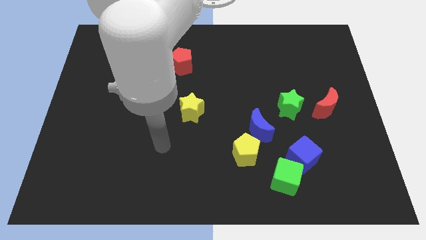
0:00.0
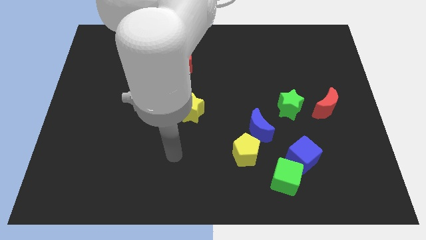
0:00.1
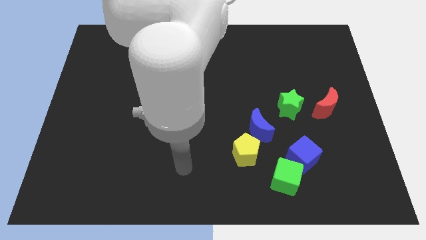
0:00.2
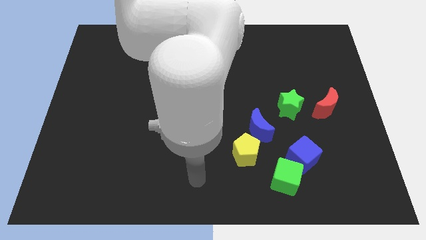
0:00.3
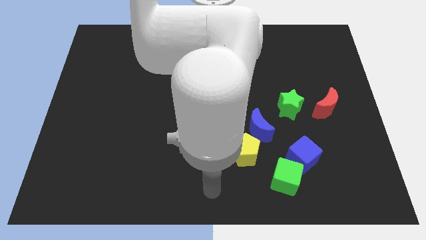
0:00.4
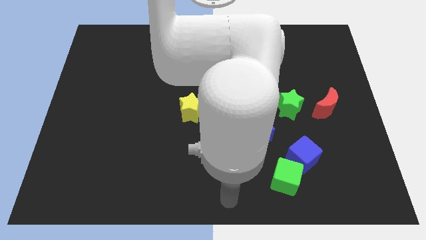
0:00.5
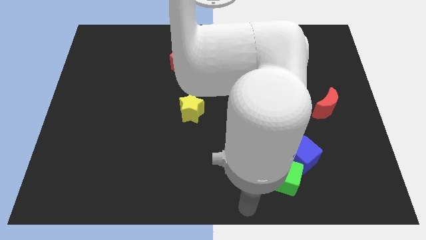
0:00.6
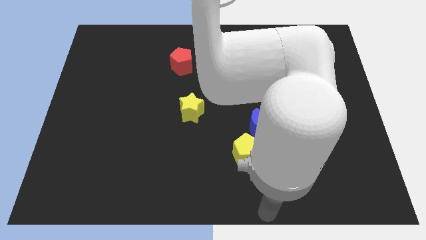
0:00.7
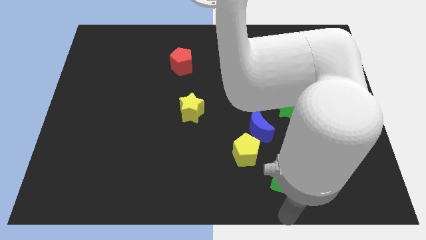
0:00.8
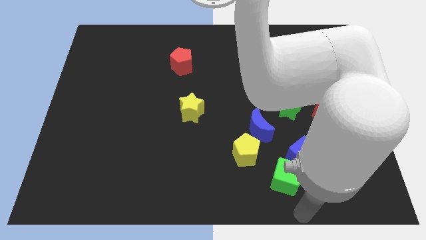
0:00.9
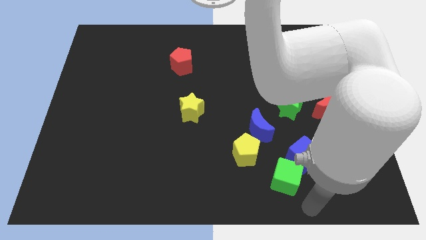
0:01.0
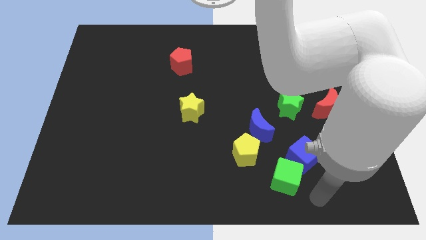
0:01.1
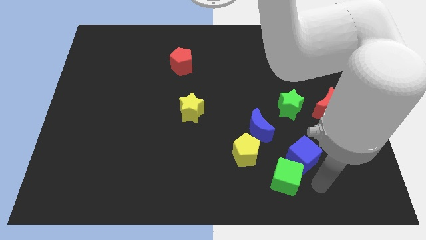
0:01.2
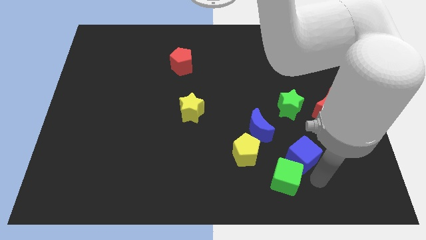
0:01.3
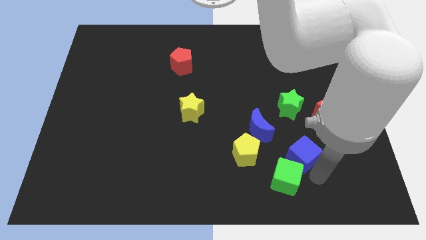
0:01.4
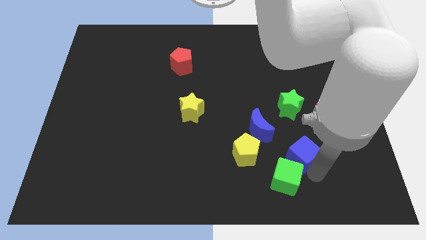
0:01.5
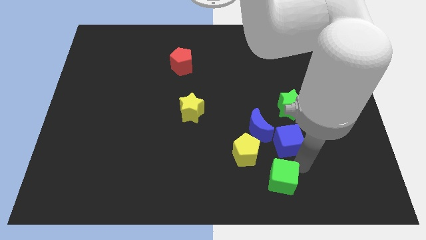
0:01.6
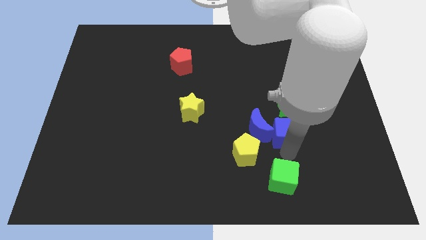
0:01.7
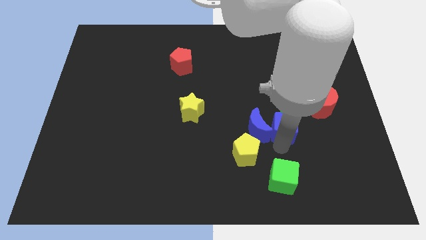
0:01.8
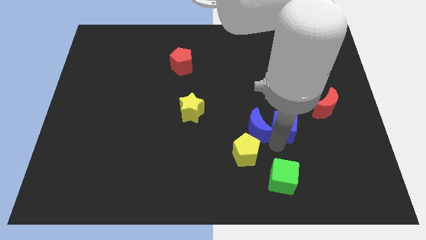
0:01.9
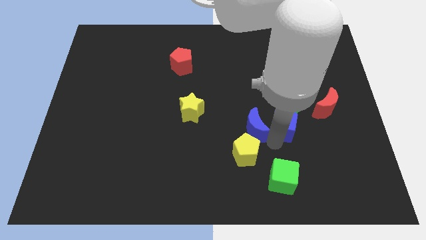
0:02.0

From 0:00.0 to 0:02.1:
place the blue cube down to the green star

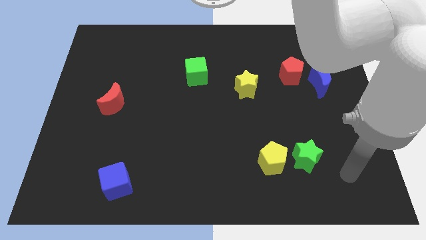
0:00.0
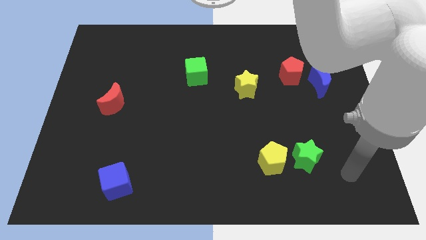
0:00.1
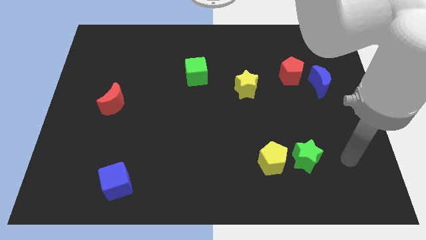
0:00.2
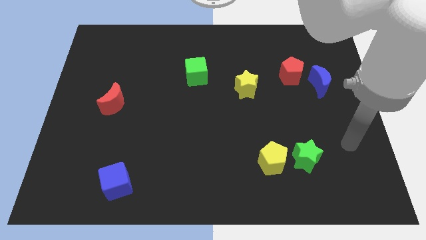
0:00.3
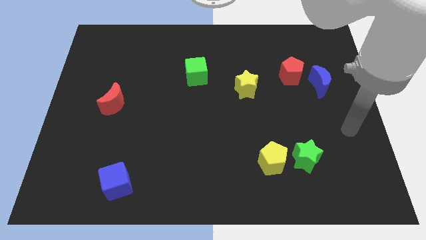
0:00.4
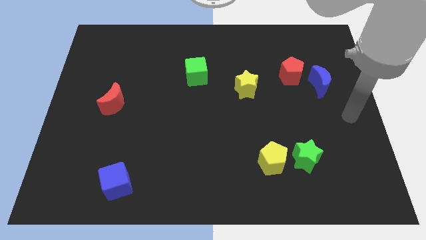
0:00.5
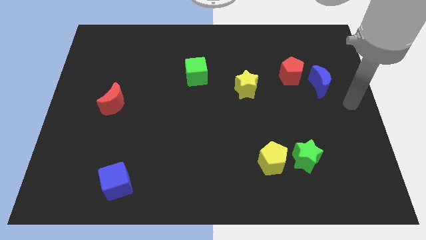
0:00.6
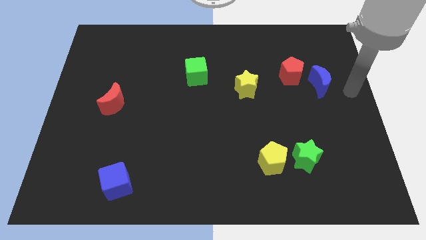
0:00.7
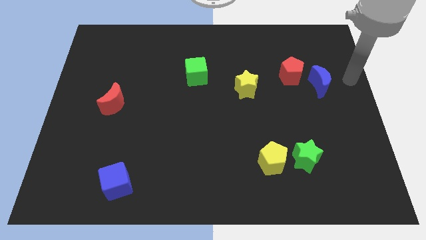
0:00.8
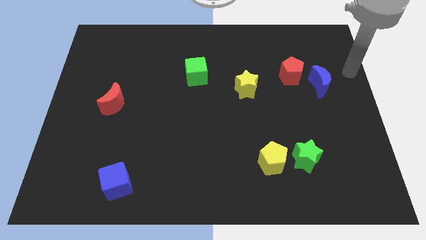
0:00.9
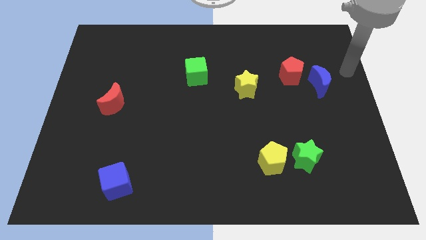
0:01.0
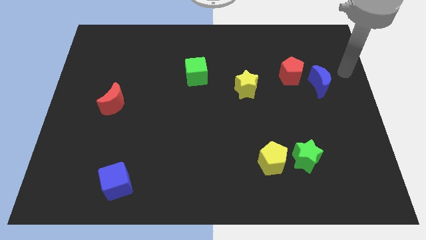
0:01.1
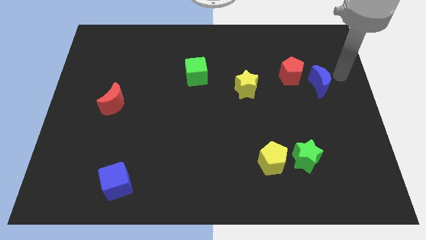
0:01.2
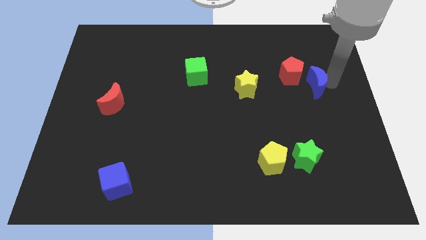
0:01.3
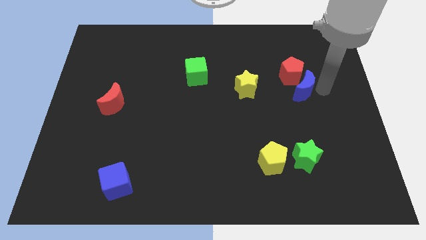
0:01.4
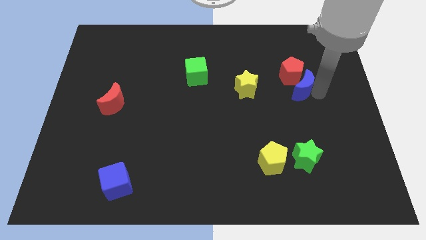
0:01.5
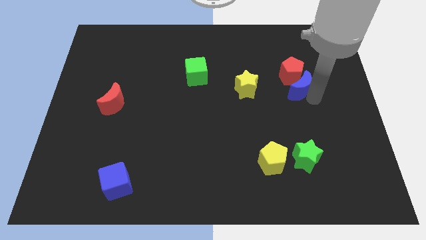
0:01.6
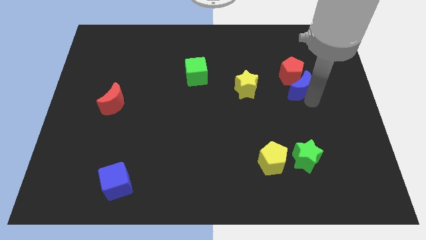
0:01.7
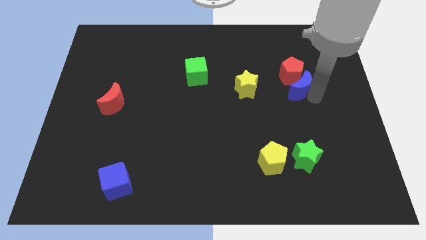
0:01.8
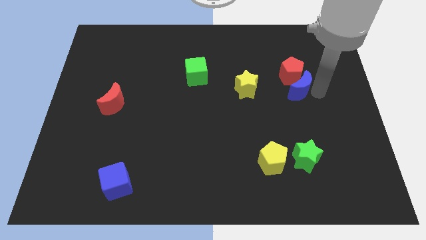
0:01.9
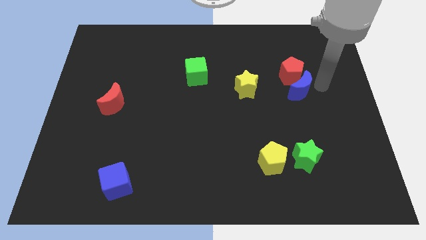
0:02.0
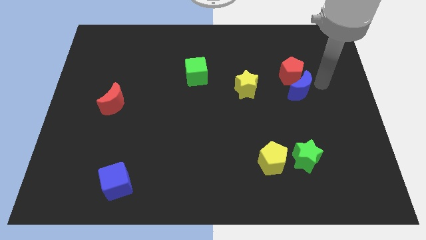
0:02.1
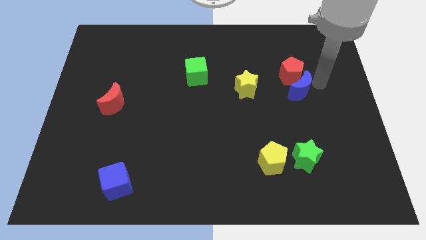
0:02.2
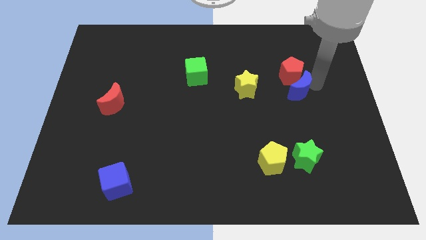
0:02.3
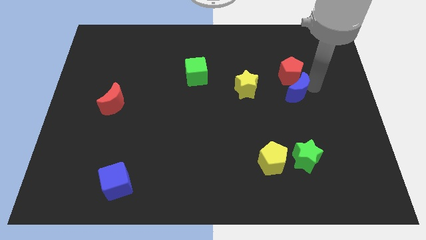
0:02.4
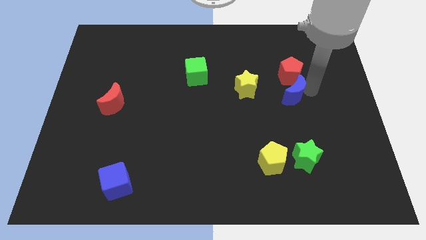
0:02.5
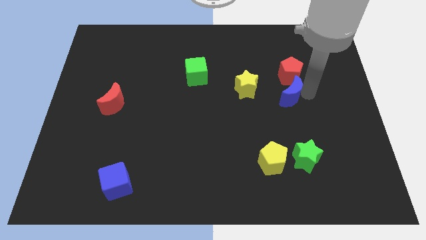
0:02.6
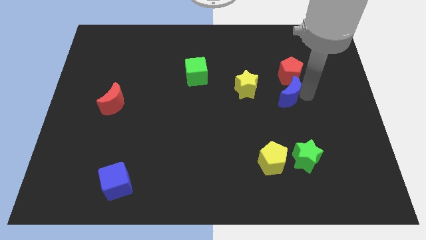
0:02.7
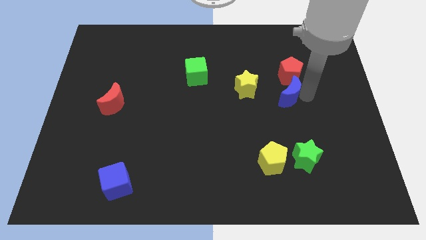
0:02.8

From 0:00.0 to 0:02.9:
move the blue moon towards red pentagon

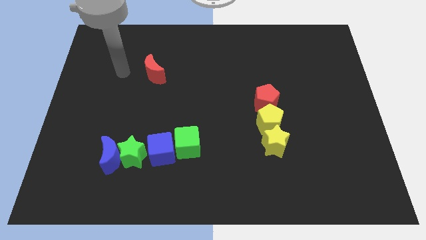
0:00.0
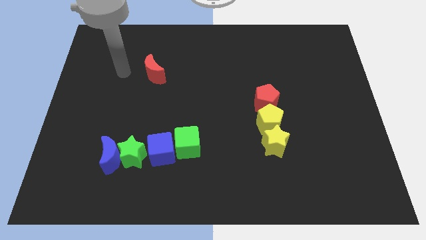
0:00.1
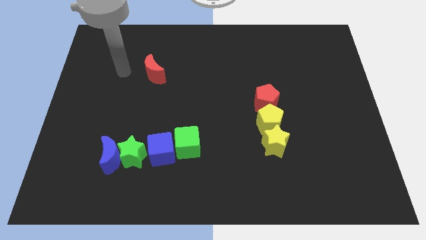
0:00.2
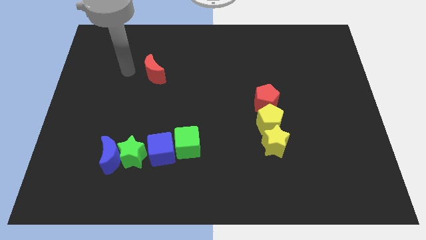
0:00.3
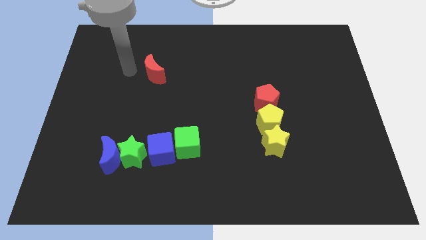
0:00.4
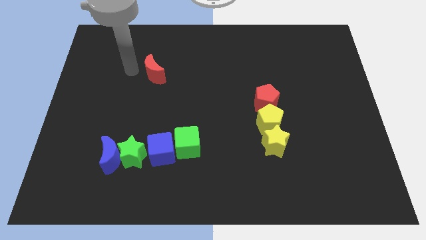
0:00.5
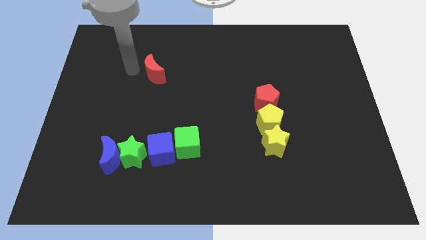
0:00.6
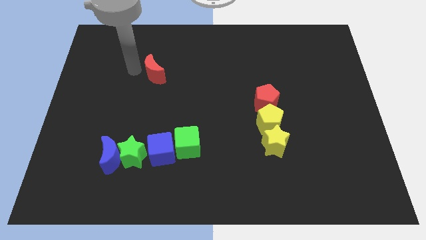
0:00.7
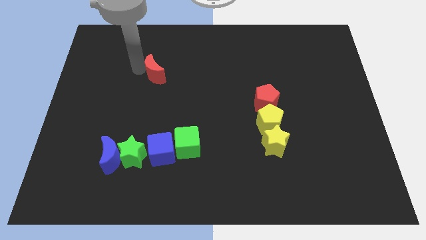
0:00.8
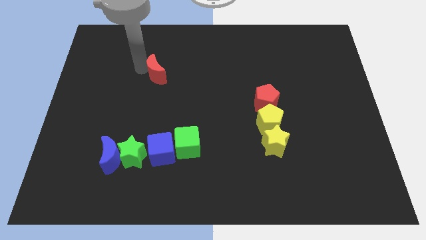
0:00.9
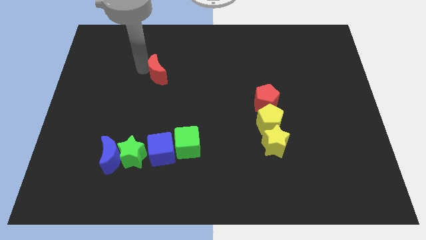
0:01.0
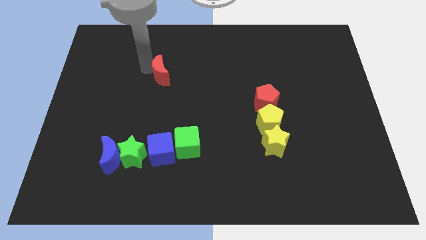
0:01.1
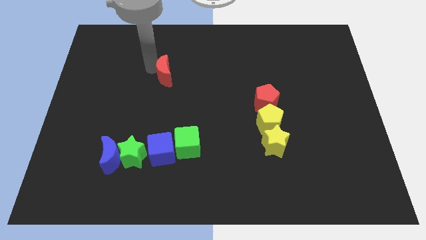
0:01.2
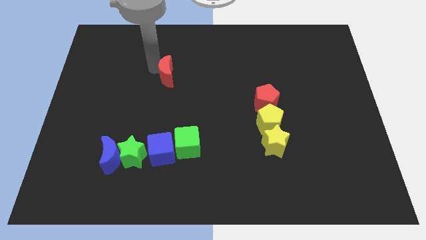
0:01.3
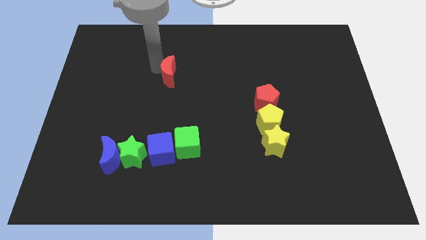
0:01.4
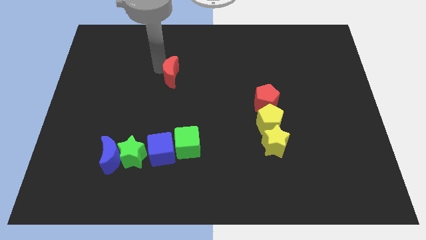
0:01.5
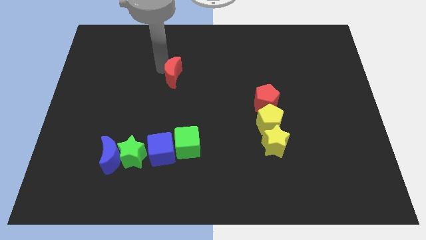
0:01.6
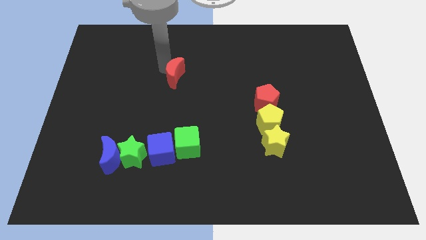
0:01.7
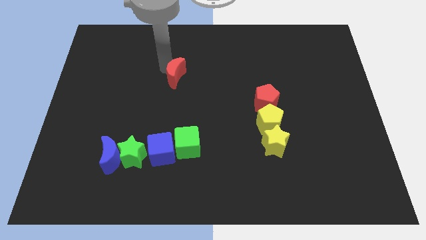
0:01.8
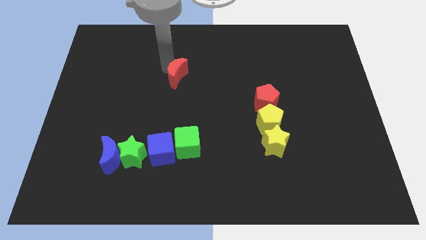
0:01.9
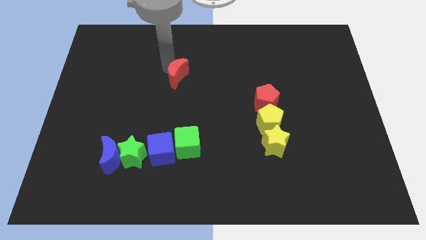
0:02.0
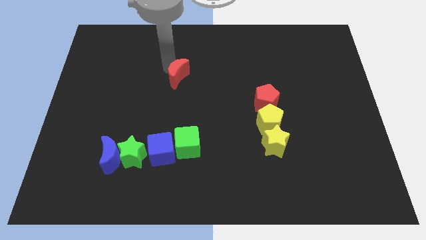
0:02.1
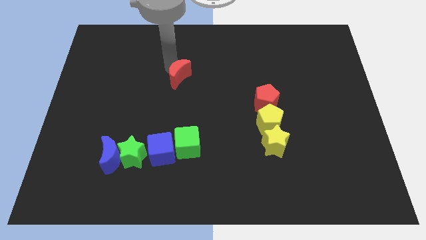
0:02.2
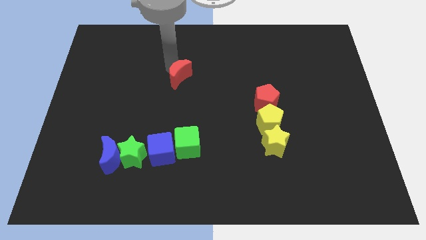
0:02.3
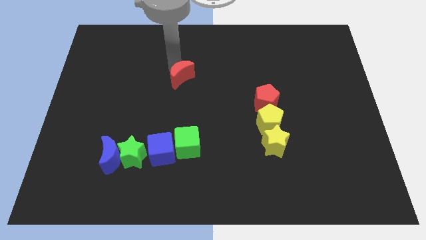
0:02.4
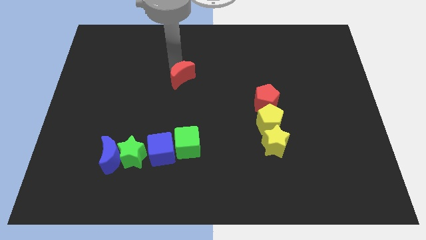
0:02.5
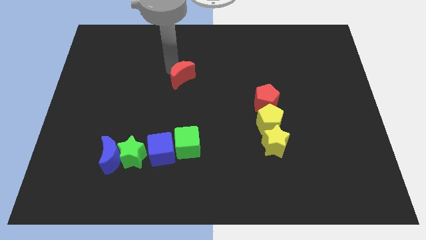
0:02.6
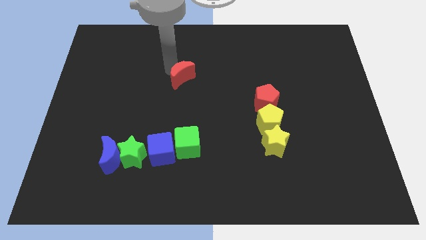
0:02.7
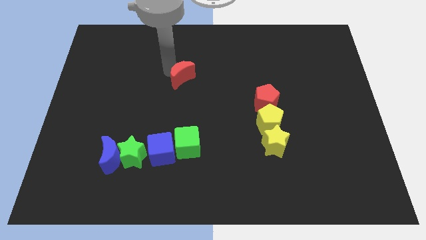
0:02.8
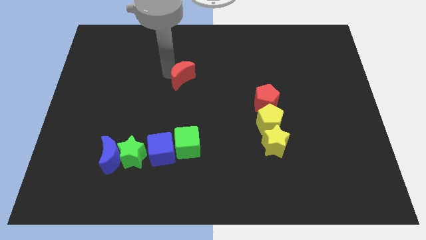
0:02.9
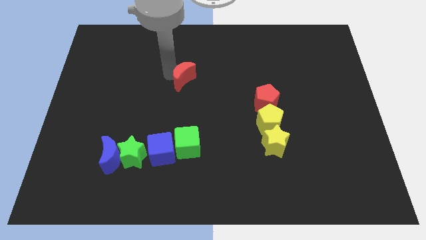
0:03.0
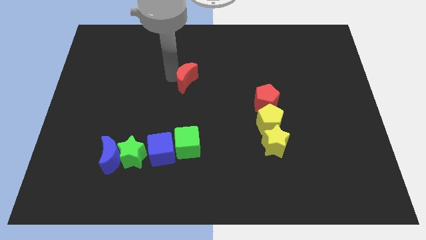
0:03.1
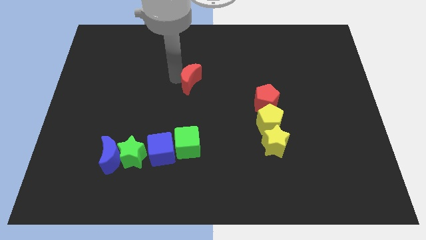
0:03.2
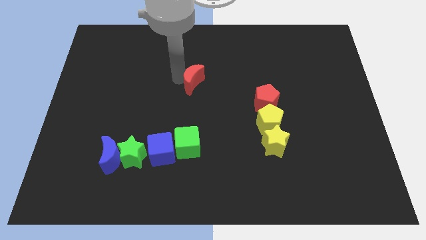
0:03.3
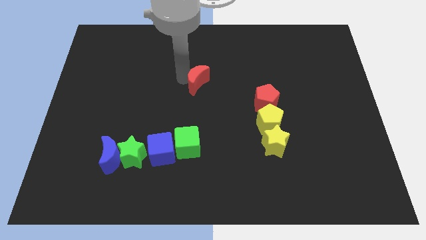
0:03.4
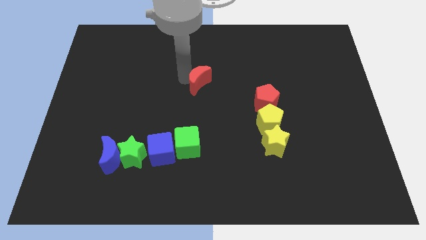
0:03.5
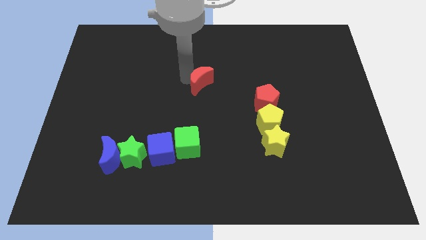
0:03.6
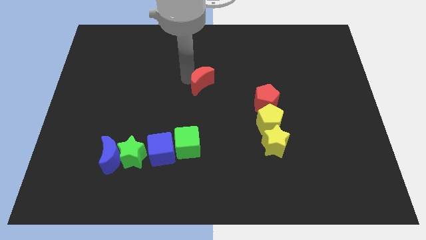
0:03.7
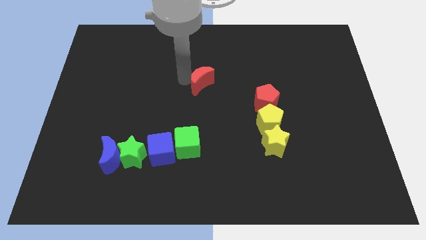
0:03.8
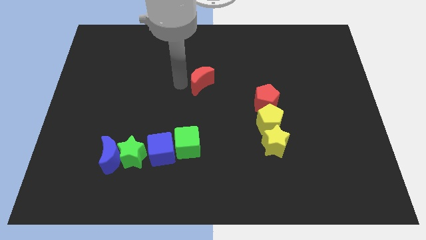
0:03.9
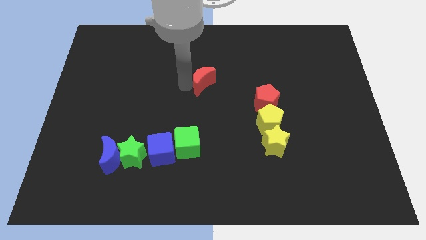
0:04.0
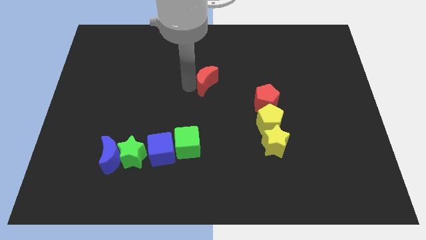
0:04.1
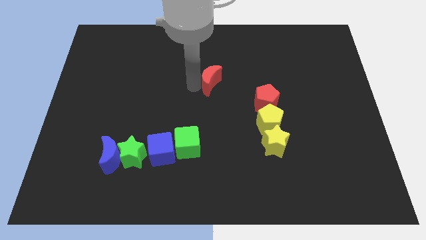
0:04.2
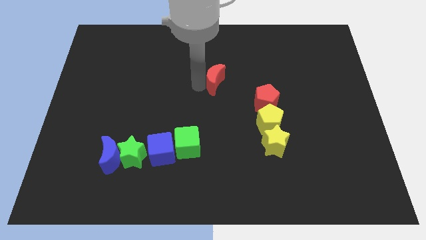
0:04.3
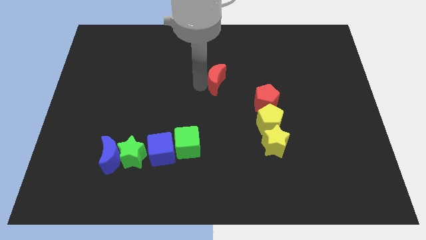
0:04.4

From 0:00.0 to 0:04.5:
drag red moon towards the red pentagon
